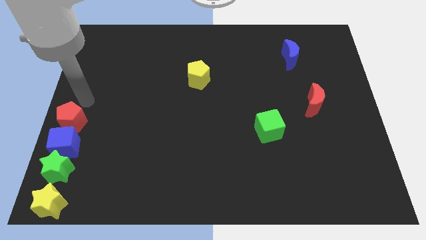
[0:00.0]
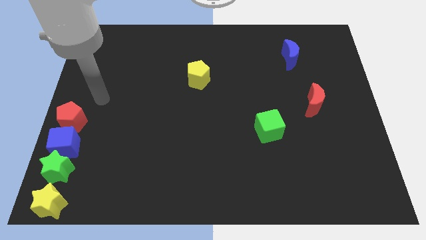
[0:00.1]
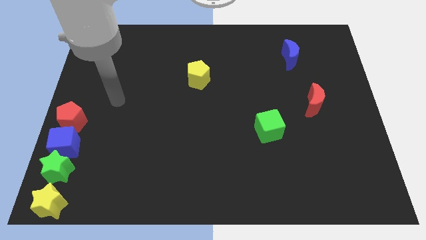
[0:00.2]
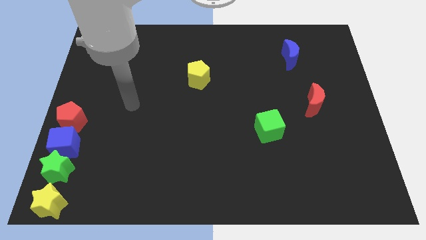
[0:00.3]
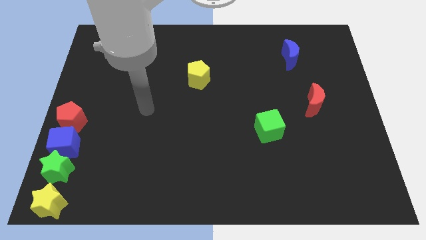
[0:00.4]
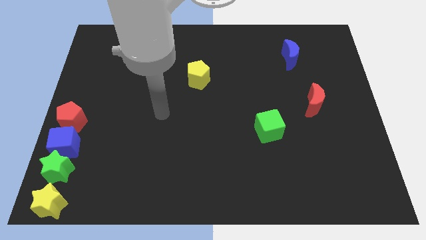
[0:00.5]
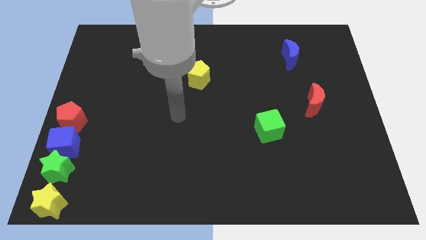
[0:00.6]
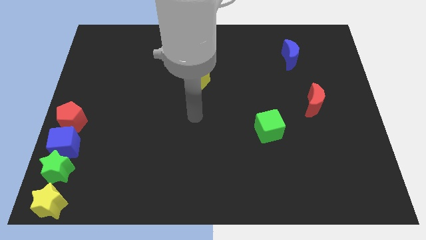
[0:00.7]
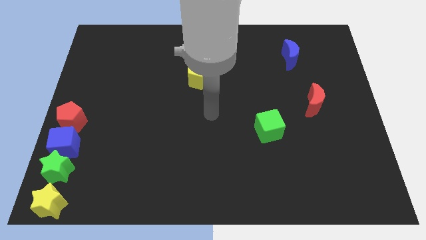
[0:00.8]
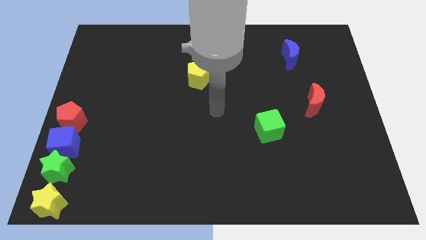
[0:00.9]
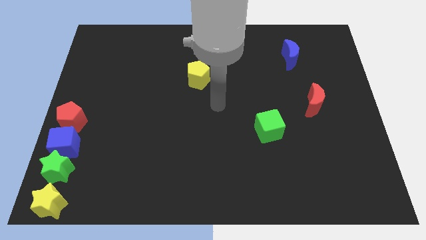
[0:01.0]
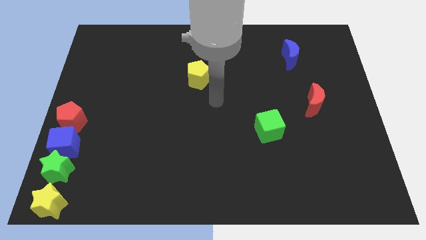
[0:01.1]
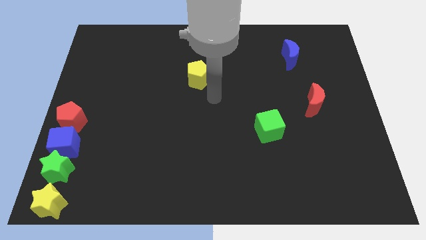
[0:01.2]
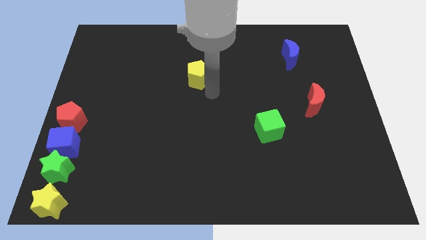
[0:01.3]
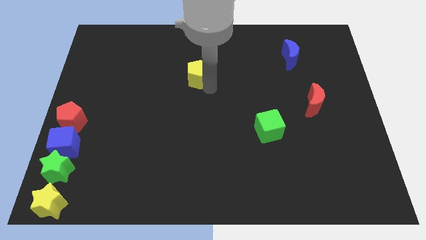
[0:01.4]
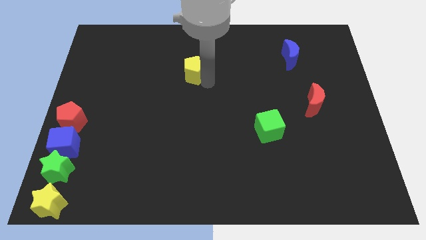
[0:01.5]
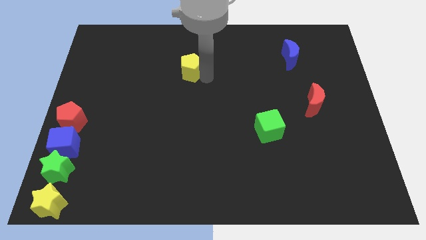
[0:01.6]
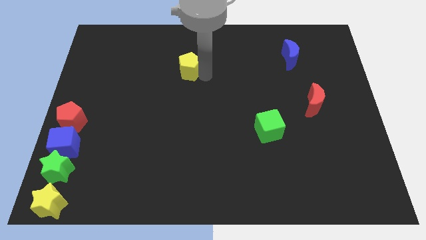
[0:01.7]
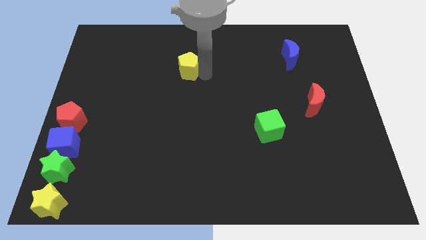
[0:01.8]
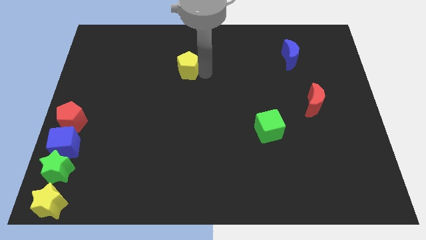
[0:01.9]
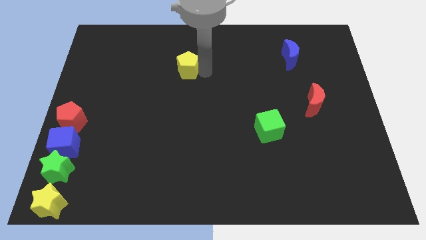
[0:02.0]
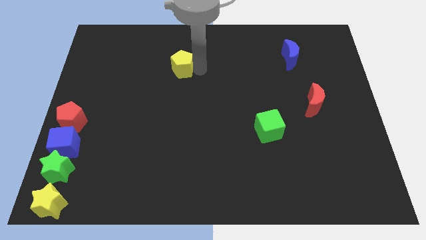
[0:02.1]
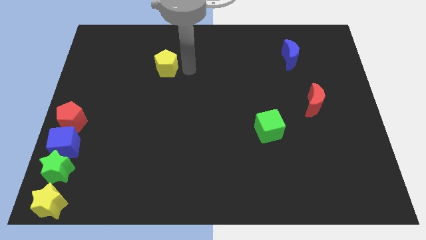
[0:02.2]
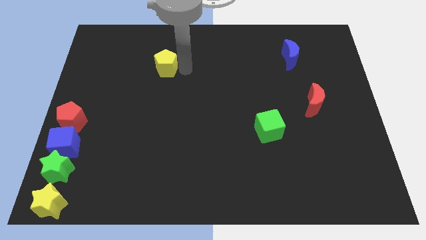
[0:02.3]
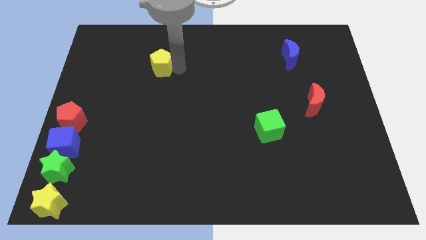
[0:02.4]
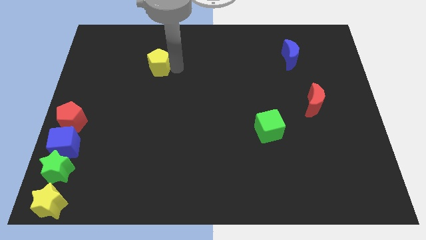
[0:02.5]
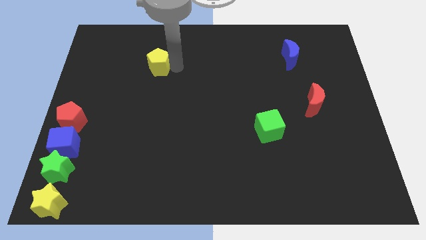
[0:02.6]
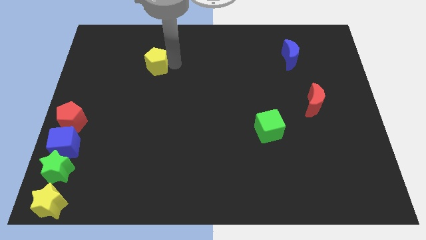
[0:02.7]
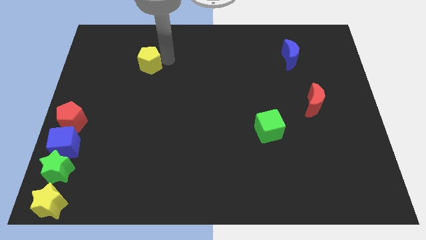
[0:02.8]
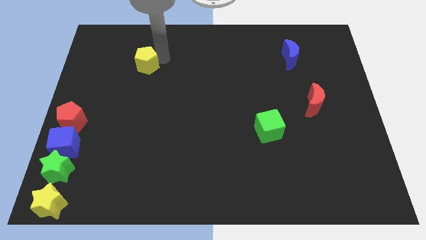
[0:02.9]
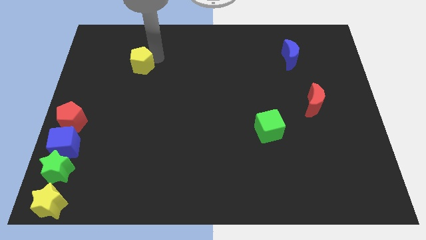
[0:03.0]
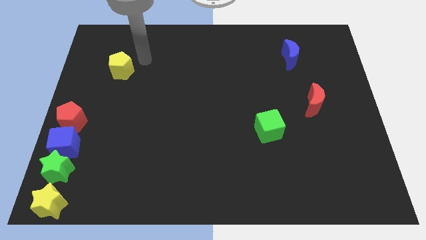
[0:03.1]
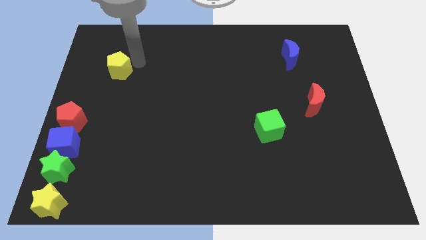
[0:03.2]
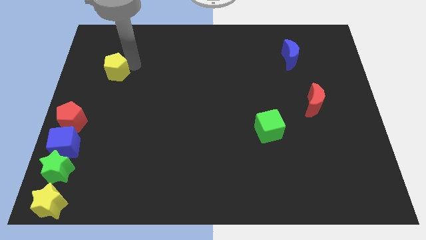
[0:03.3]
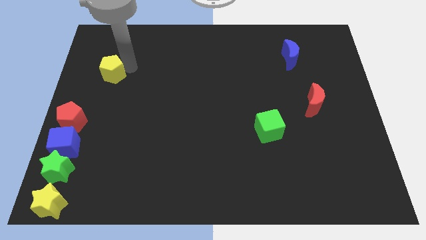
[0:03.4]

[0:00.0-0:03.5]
move the yellow pentagon to the top right of the red pentagon

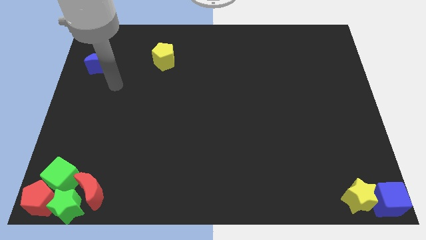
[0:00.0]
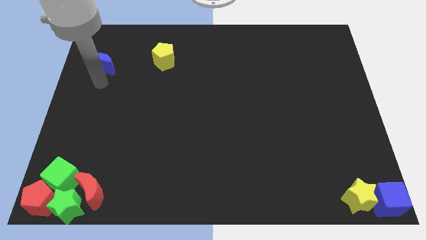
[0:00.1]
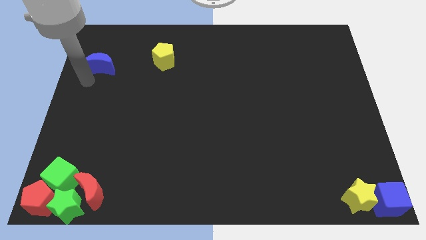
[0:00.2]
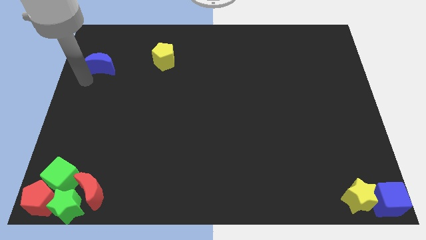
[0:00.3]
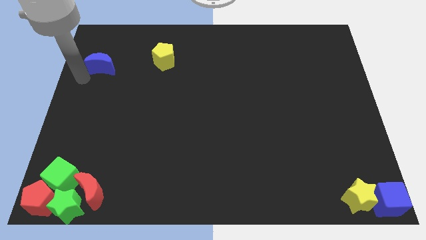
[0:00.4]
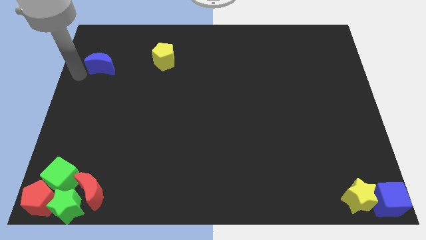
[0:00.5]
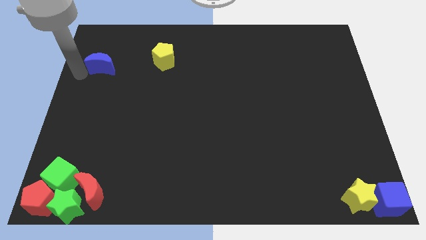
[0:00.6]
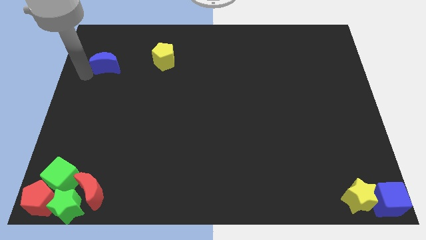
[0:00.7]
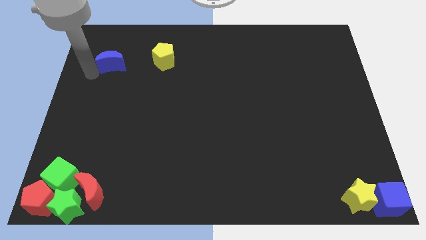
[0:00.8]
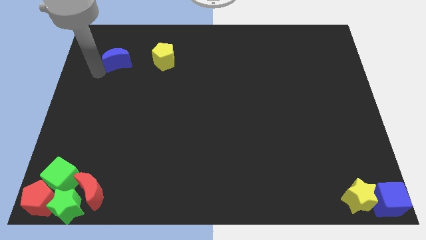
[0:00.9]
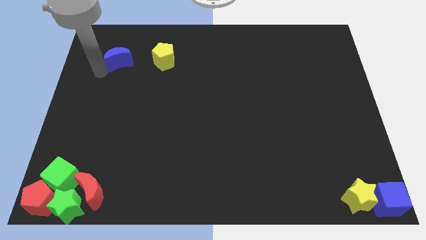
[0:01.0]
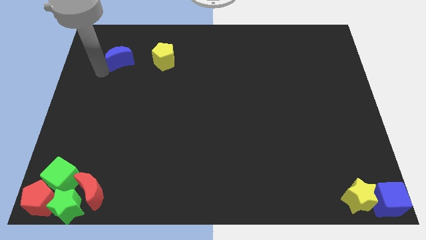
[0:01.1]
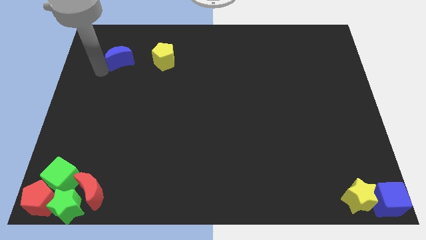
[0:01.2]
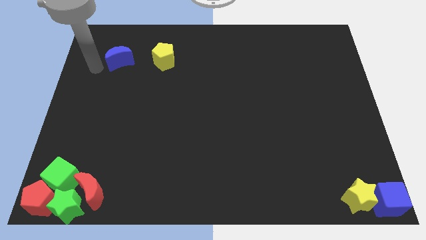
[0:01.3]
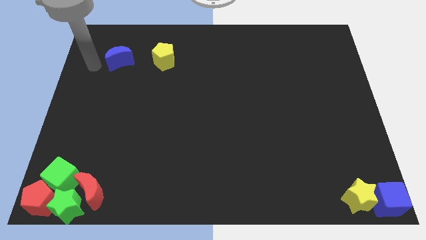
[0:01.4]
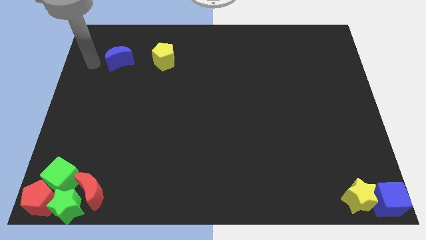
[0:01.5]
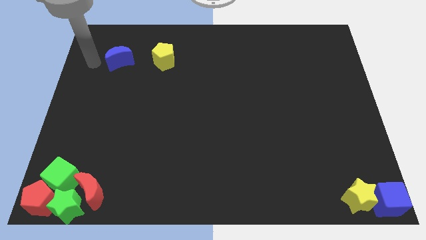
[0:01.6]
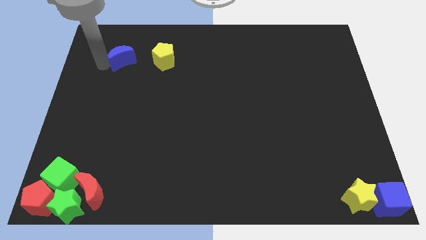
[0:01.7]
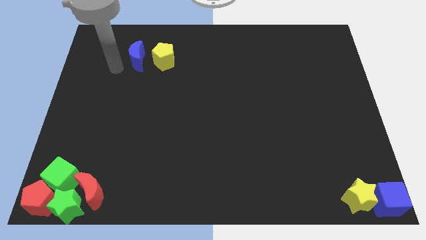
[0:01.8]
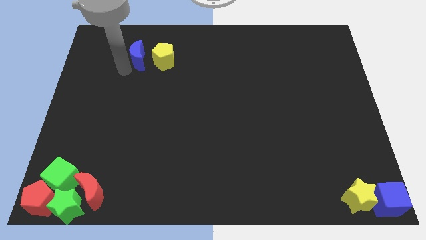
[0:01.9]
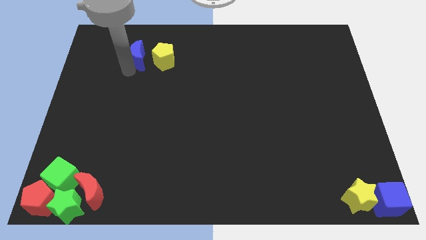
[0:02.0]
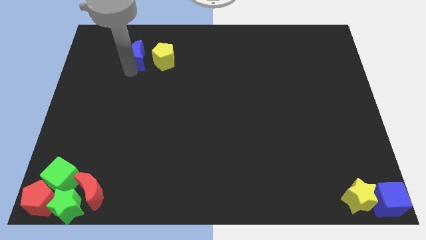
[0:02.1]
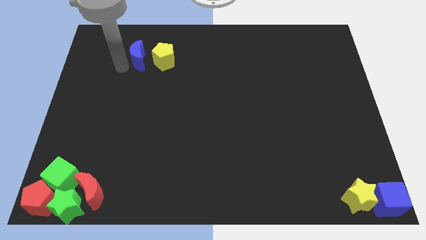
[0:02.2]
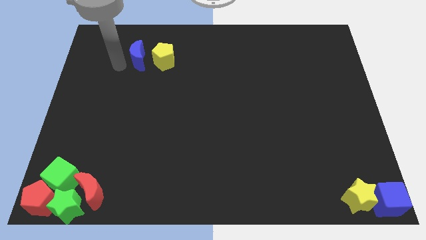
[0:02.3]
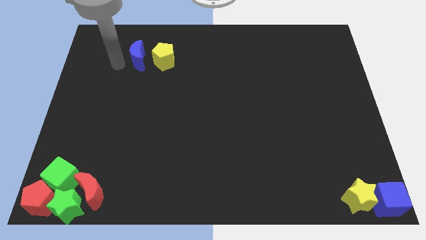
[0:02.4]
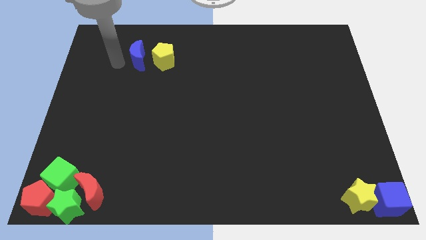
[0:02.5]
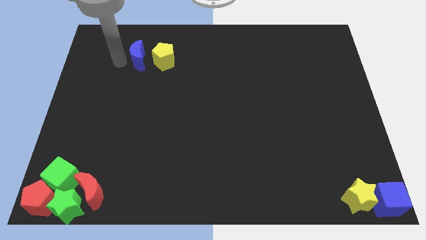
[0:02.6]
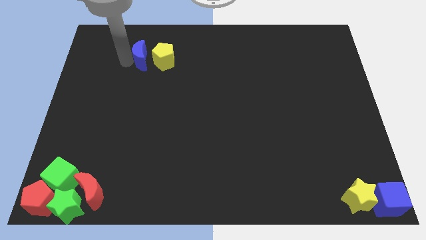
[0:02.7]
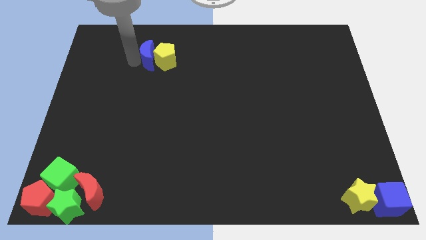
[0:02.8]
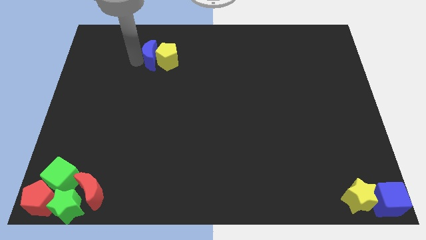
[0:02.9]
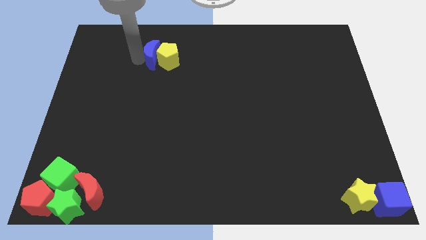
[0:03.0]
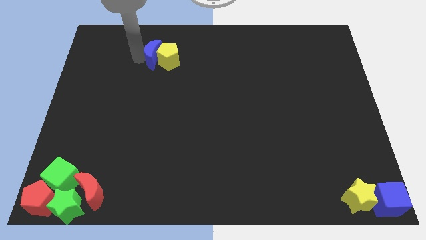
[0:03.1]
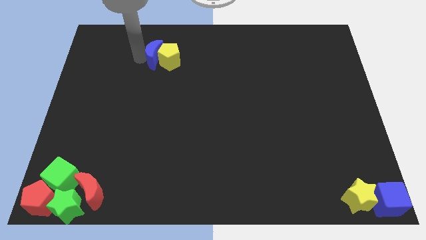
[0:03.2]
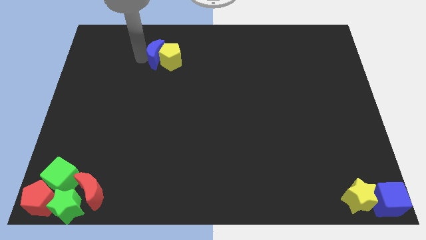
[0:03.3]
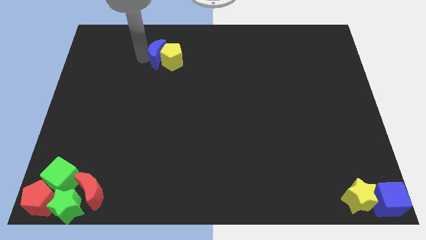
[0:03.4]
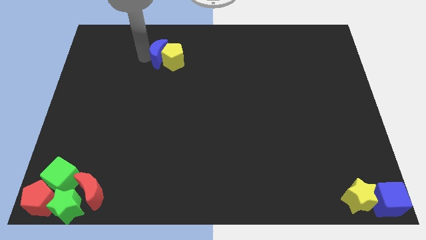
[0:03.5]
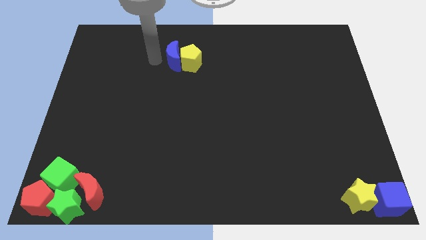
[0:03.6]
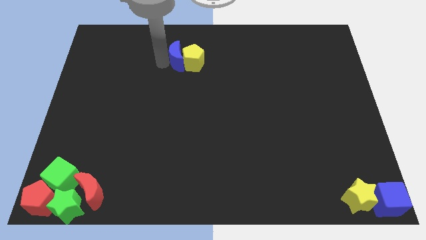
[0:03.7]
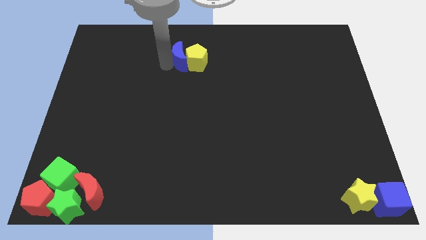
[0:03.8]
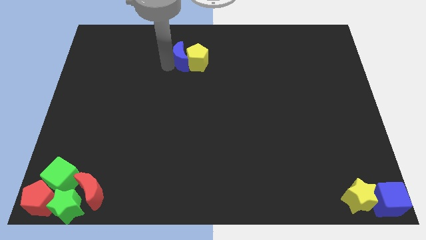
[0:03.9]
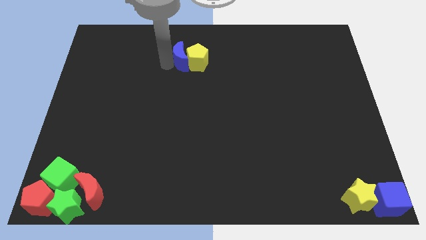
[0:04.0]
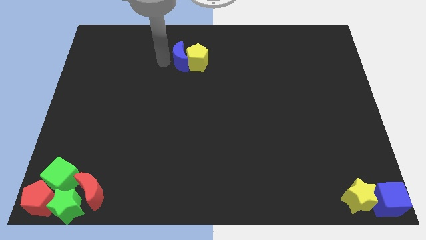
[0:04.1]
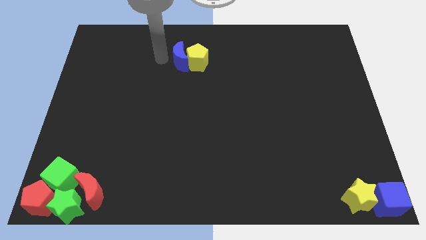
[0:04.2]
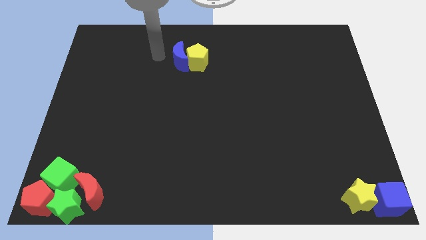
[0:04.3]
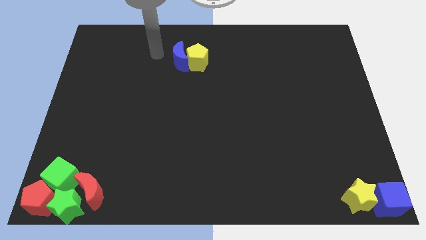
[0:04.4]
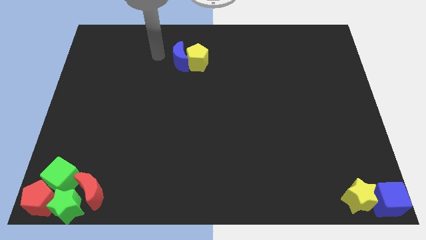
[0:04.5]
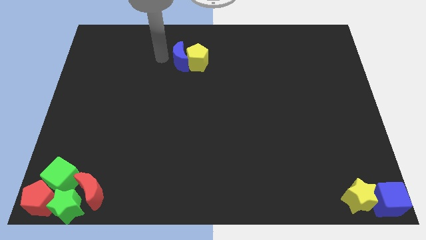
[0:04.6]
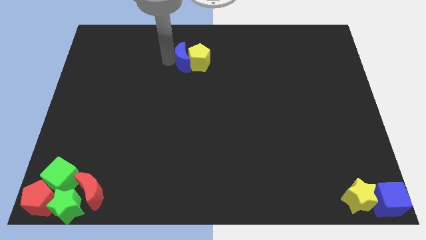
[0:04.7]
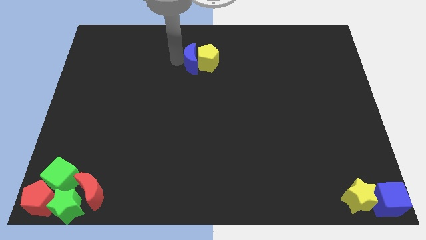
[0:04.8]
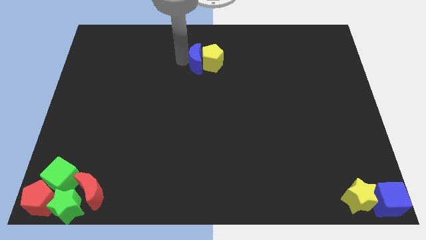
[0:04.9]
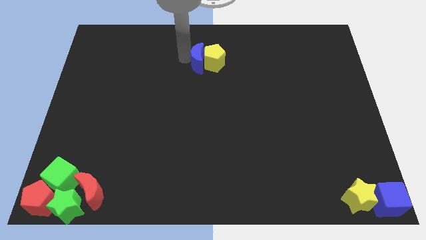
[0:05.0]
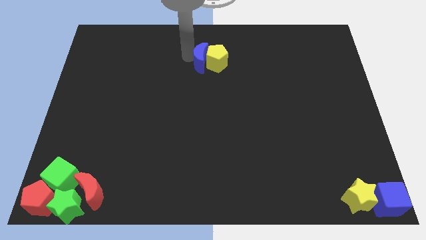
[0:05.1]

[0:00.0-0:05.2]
move the blue moon and yellow pentagon to the top center of the board

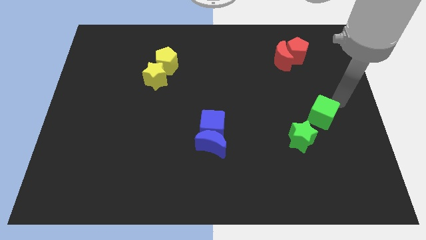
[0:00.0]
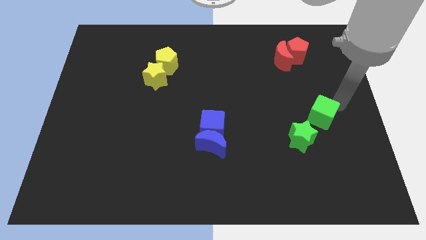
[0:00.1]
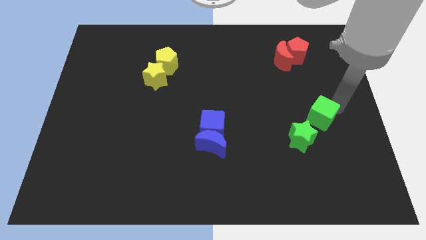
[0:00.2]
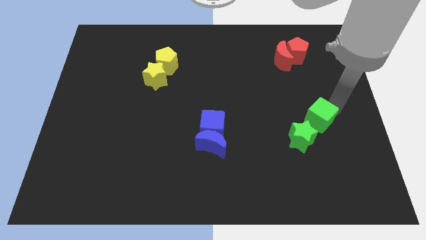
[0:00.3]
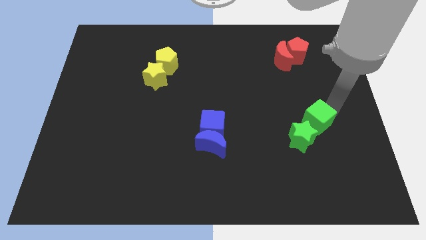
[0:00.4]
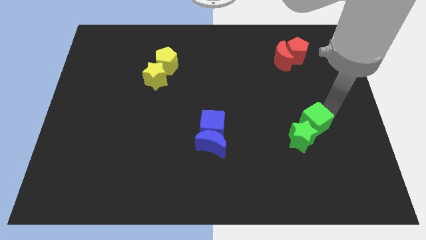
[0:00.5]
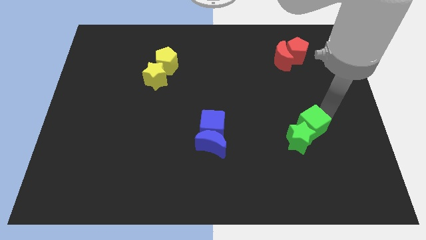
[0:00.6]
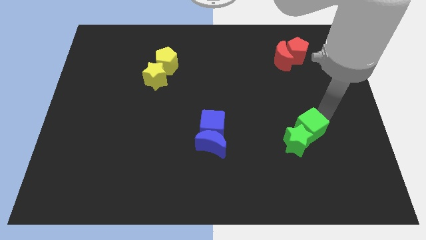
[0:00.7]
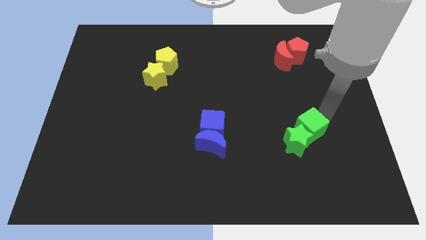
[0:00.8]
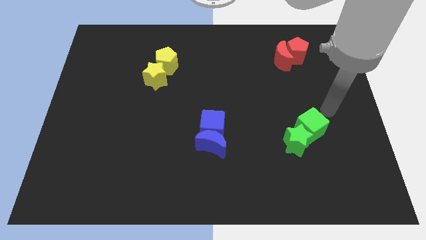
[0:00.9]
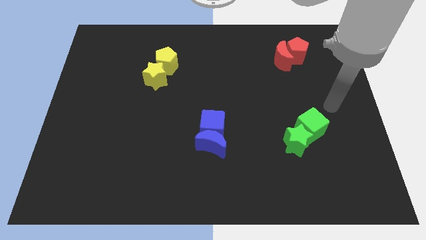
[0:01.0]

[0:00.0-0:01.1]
slide the green cube at the top right side of the green star
